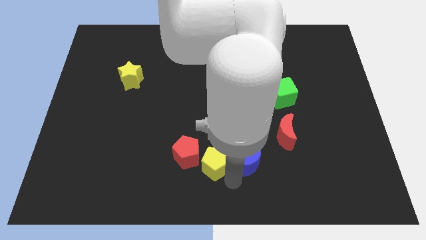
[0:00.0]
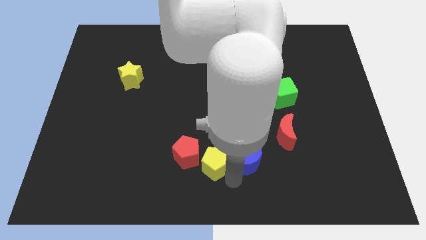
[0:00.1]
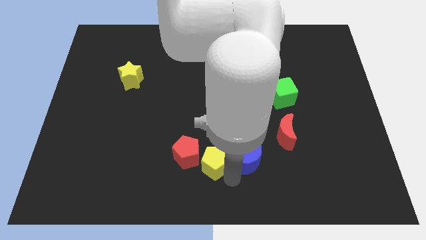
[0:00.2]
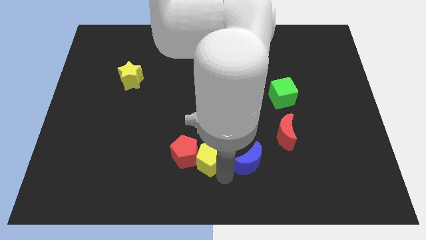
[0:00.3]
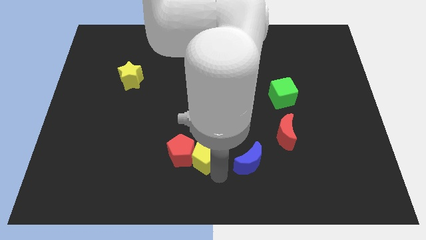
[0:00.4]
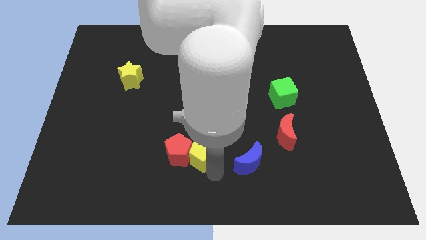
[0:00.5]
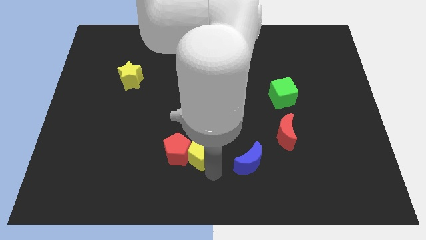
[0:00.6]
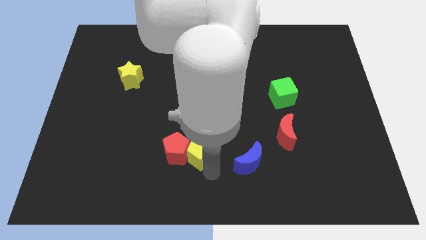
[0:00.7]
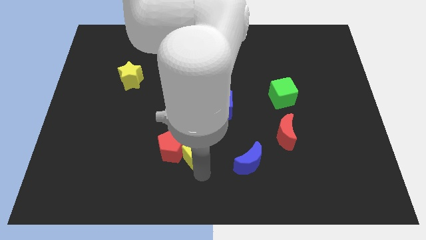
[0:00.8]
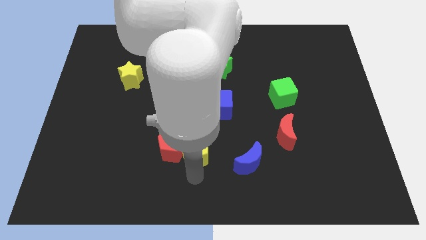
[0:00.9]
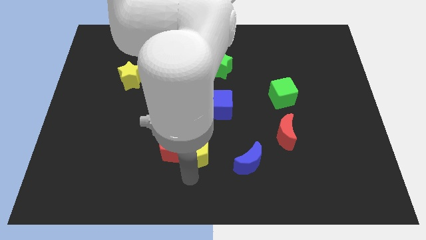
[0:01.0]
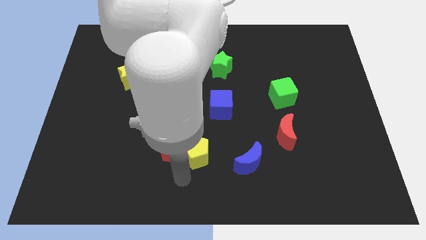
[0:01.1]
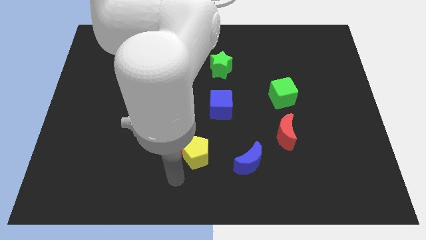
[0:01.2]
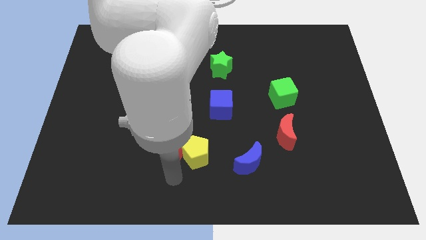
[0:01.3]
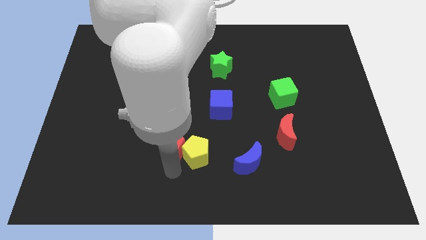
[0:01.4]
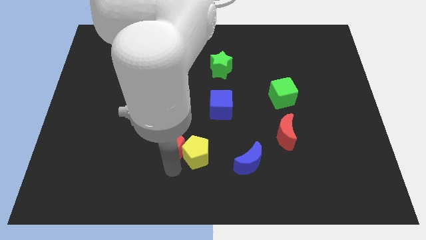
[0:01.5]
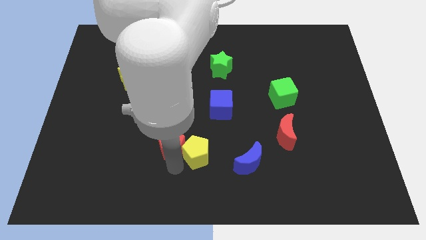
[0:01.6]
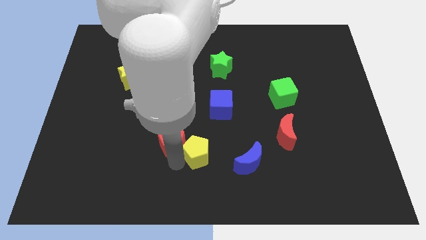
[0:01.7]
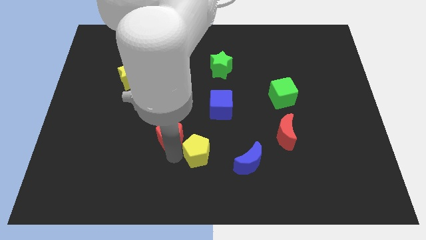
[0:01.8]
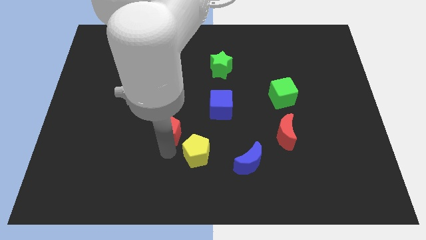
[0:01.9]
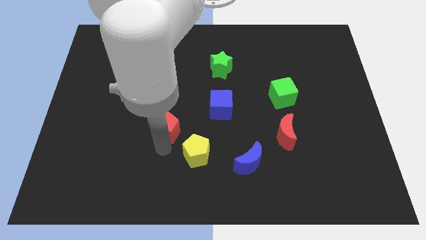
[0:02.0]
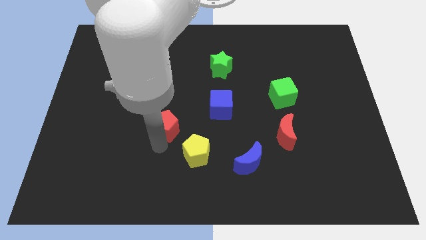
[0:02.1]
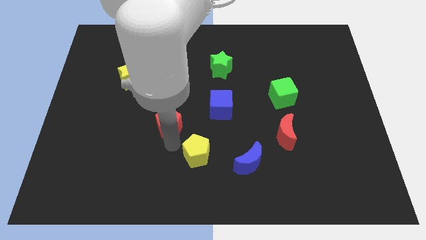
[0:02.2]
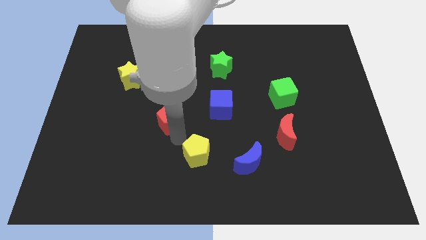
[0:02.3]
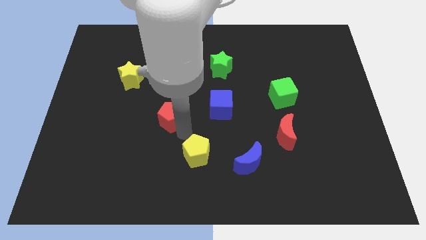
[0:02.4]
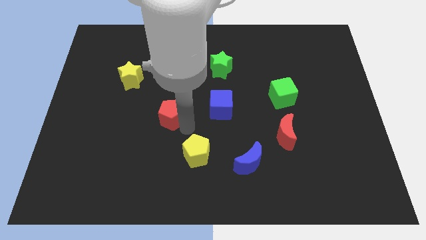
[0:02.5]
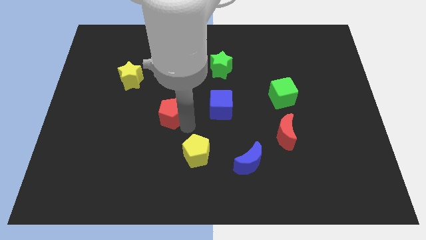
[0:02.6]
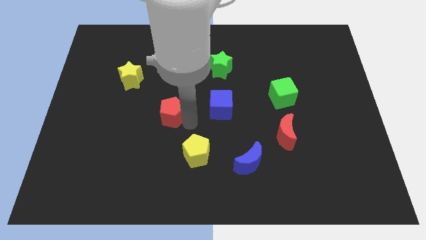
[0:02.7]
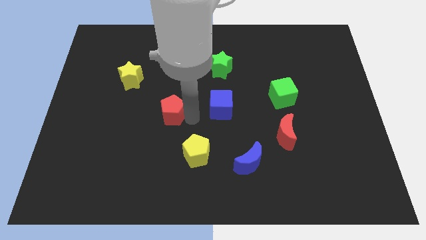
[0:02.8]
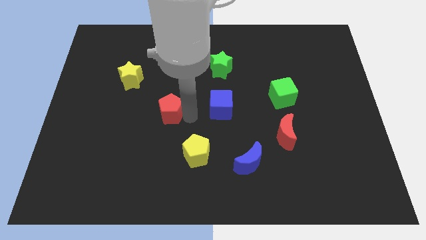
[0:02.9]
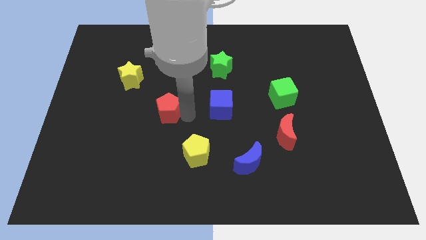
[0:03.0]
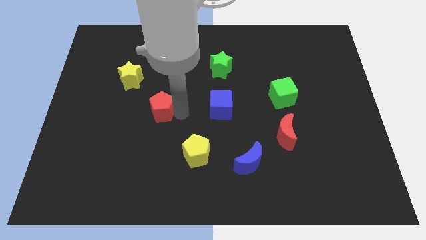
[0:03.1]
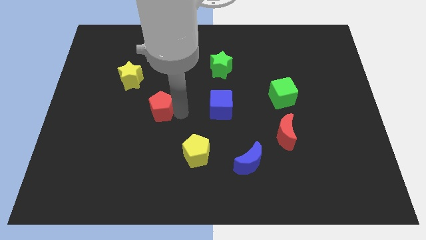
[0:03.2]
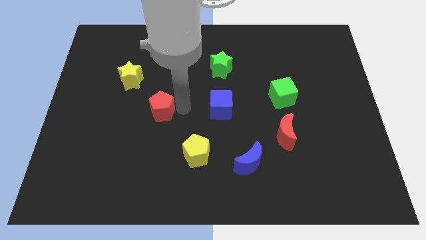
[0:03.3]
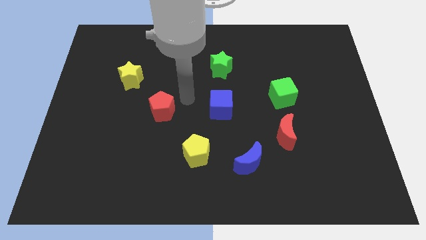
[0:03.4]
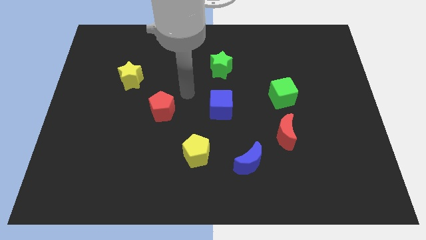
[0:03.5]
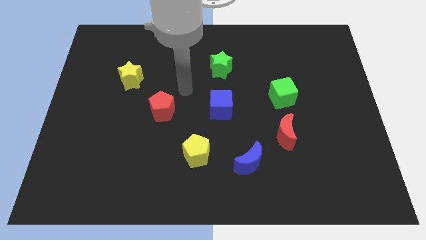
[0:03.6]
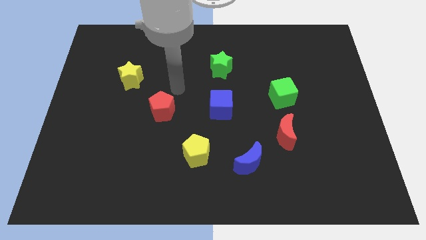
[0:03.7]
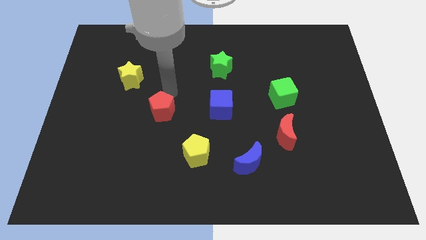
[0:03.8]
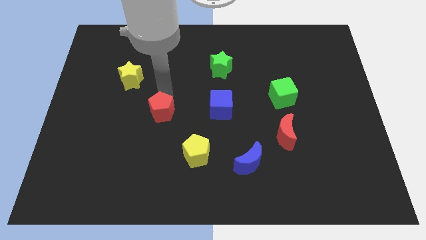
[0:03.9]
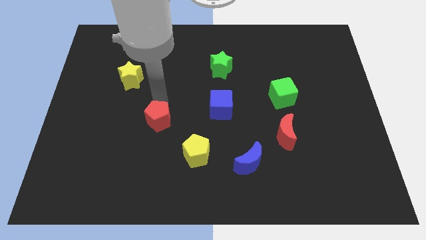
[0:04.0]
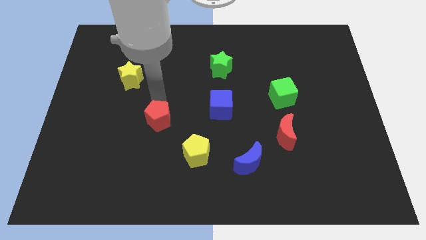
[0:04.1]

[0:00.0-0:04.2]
separate the red pentagon from the yellow pentagon

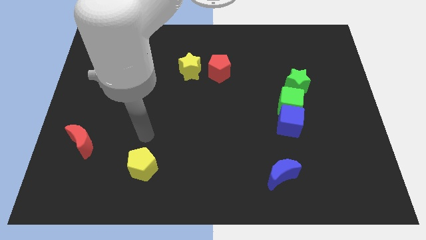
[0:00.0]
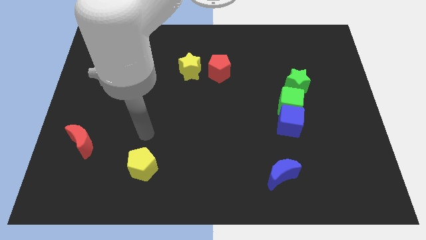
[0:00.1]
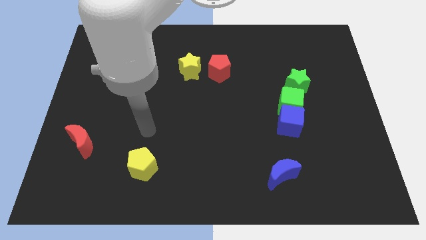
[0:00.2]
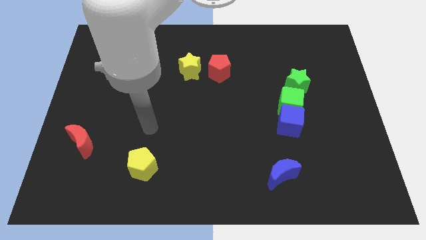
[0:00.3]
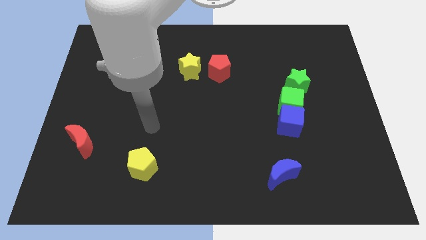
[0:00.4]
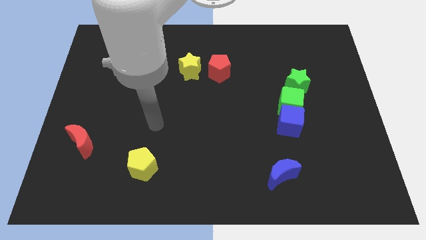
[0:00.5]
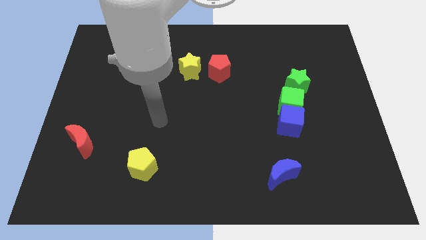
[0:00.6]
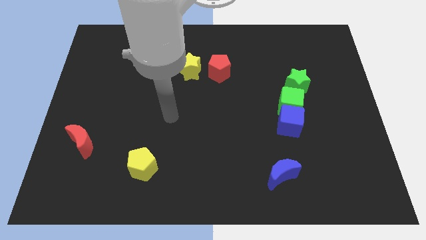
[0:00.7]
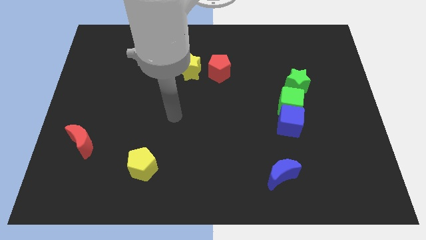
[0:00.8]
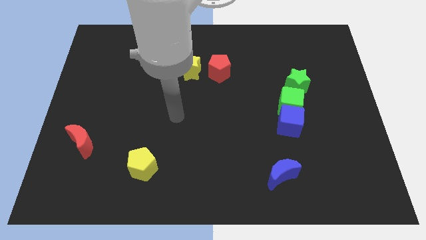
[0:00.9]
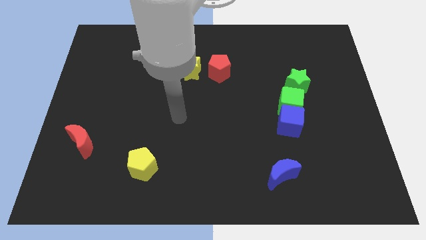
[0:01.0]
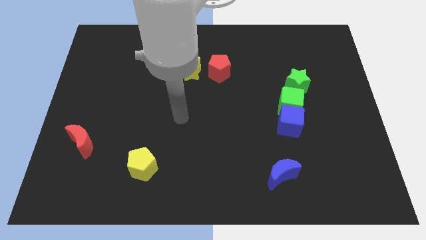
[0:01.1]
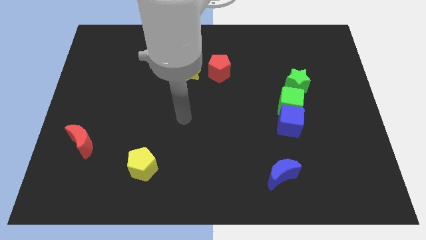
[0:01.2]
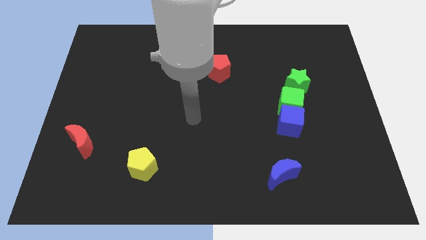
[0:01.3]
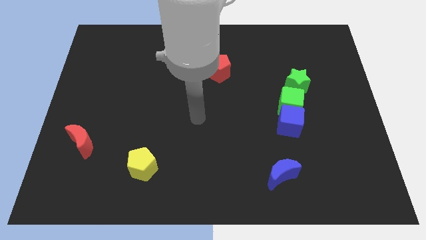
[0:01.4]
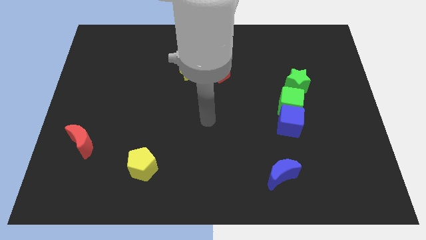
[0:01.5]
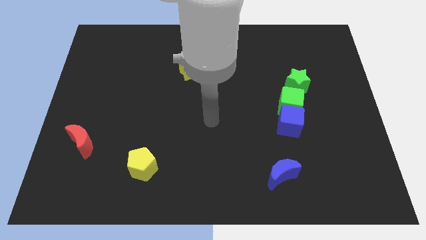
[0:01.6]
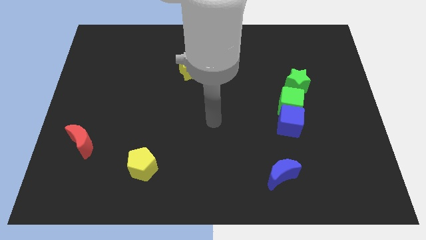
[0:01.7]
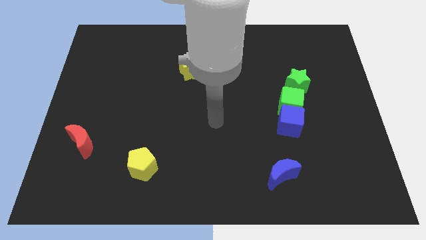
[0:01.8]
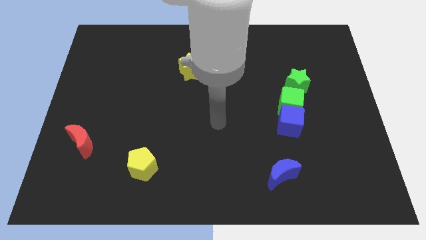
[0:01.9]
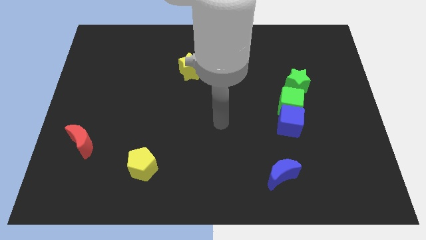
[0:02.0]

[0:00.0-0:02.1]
move your hand away from the top side of the yellow pentagon

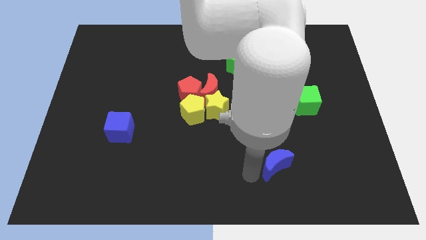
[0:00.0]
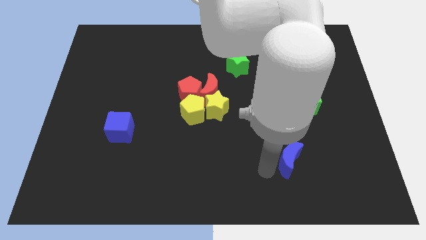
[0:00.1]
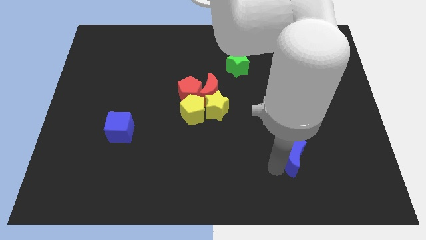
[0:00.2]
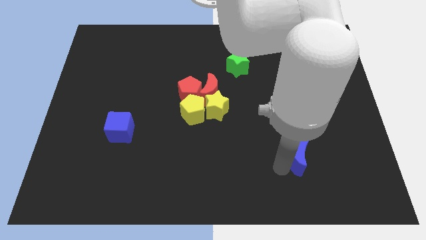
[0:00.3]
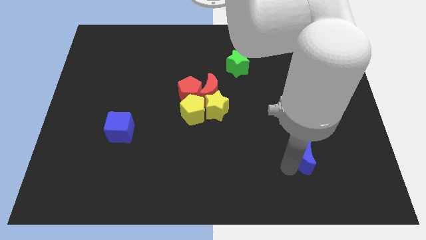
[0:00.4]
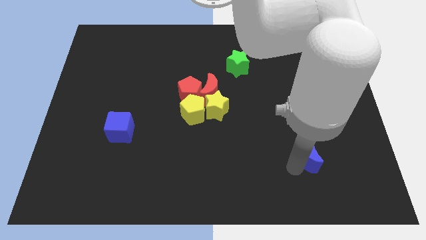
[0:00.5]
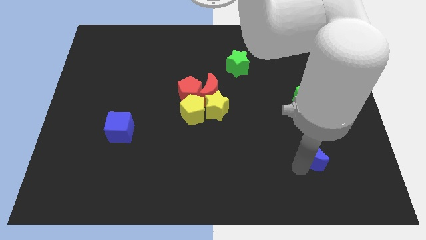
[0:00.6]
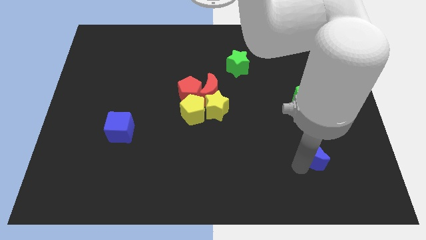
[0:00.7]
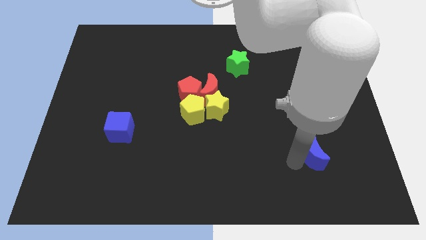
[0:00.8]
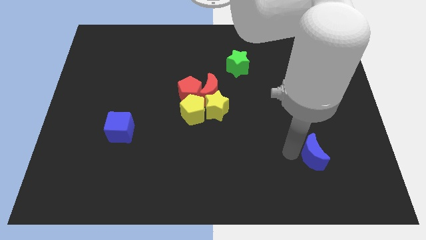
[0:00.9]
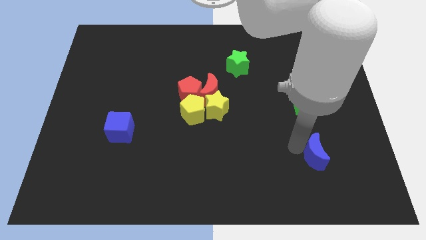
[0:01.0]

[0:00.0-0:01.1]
push blue crescent below green cube

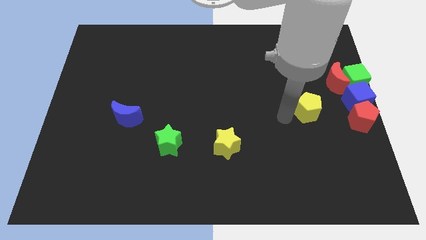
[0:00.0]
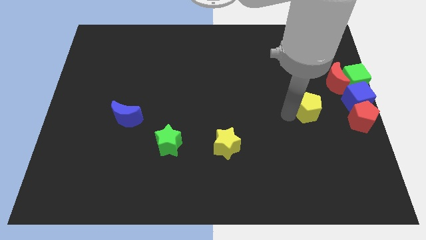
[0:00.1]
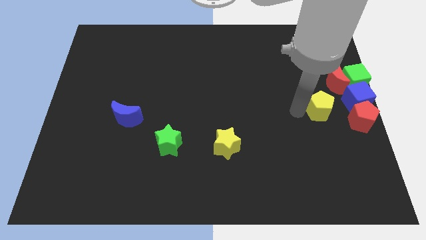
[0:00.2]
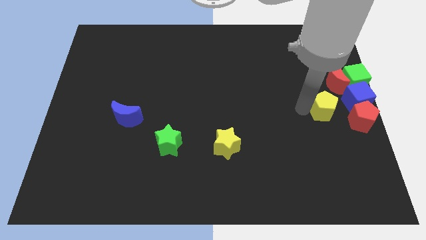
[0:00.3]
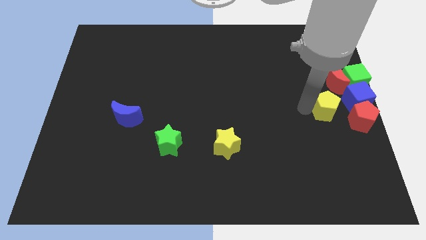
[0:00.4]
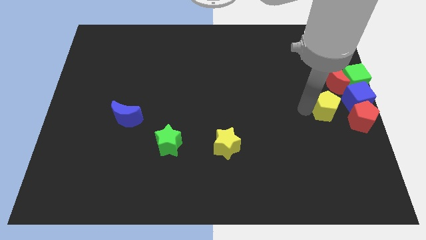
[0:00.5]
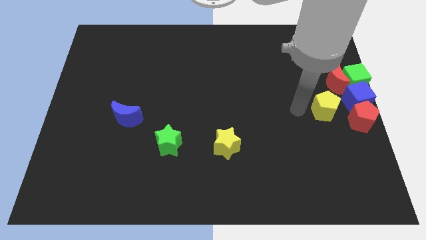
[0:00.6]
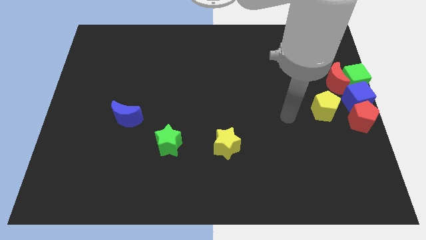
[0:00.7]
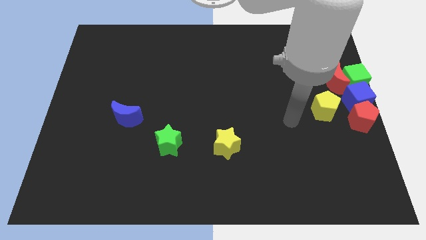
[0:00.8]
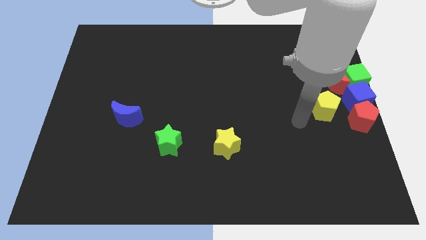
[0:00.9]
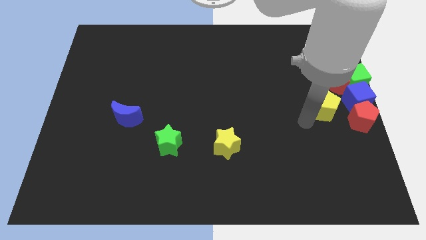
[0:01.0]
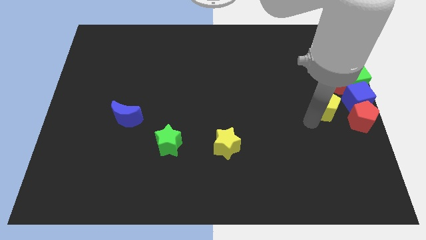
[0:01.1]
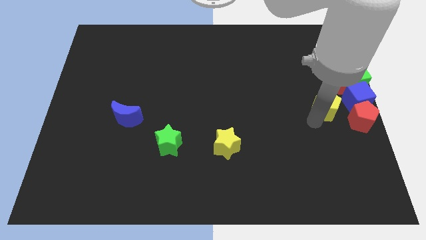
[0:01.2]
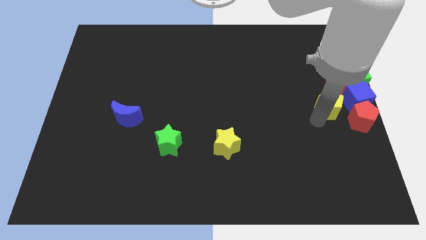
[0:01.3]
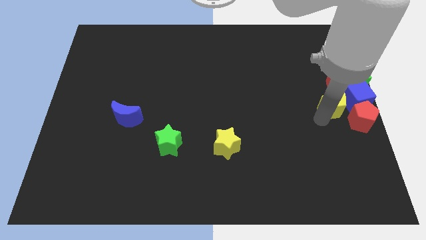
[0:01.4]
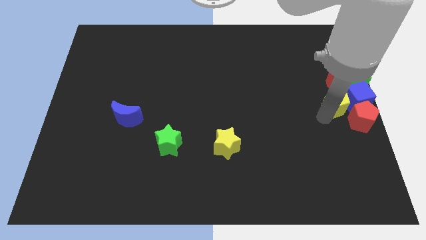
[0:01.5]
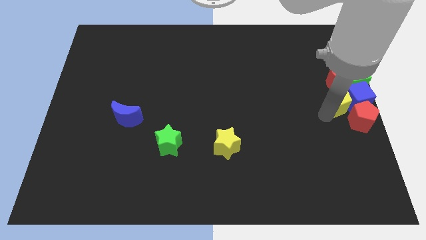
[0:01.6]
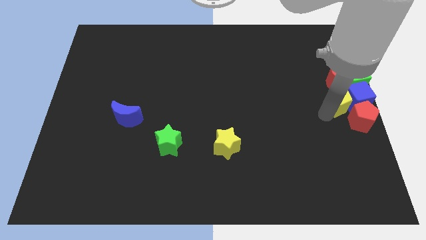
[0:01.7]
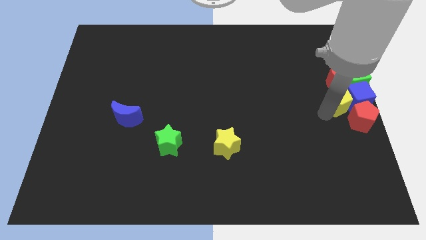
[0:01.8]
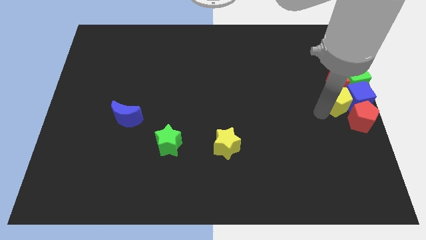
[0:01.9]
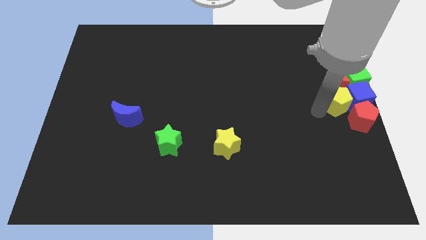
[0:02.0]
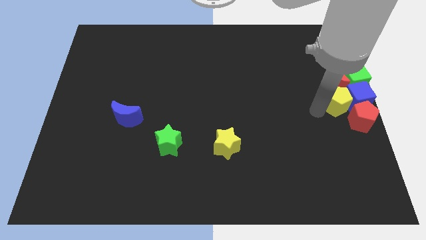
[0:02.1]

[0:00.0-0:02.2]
place yellow pentagon left to the blue cube
